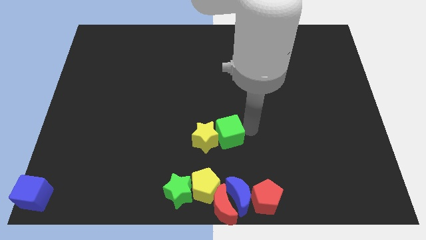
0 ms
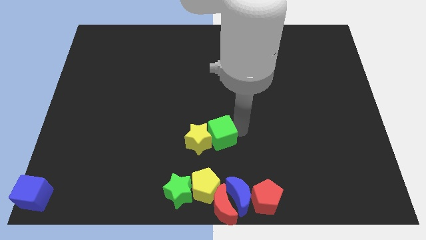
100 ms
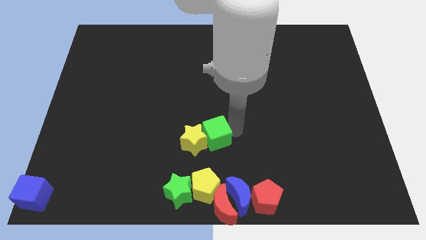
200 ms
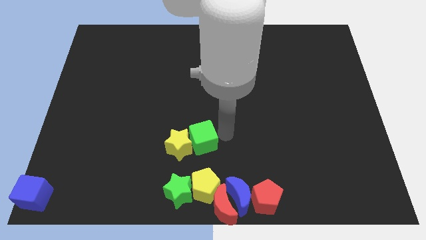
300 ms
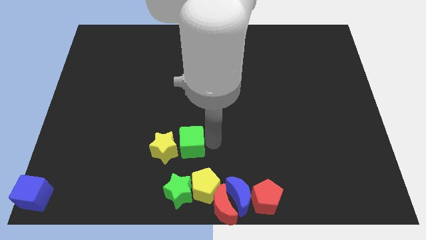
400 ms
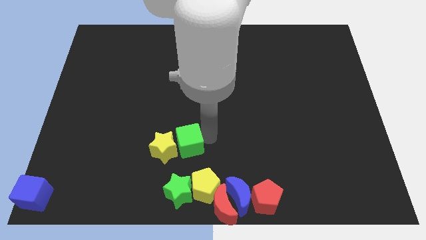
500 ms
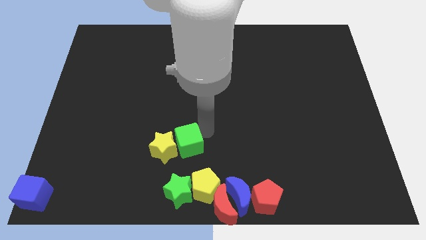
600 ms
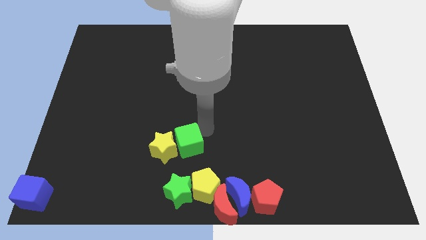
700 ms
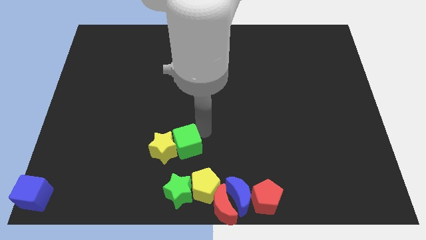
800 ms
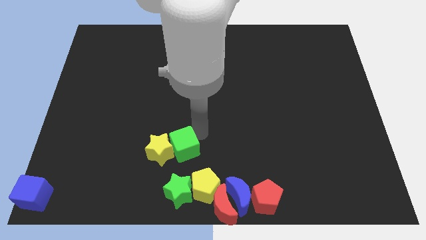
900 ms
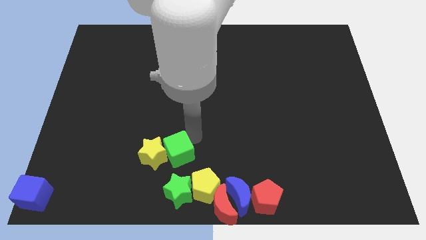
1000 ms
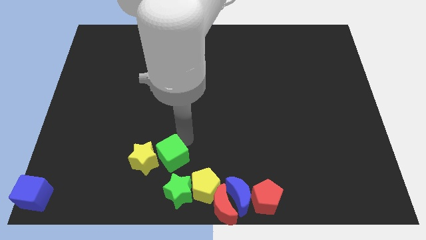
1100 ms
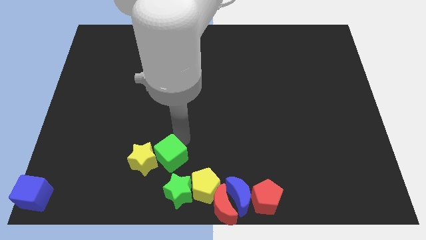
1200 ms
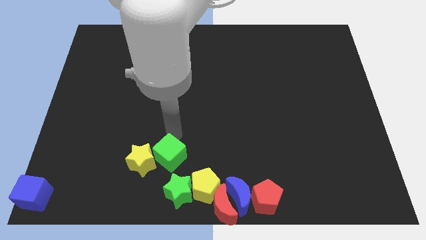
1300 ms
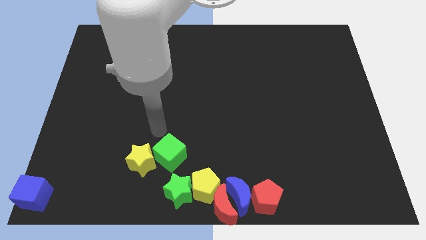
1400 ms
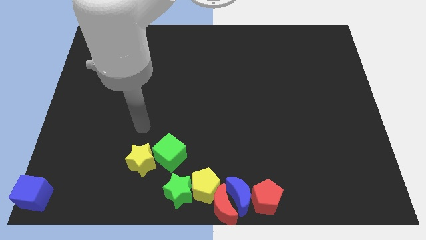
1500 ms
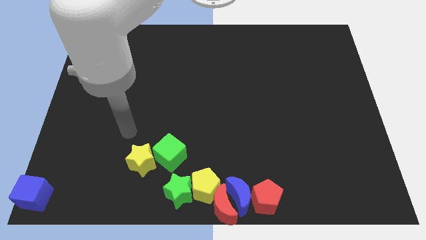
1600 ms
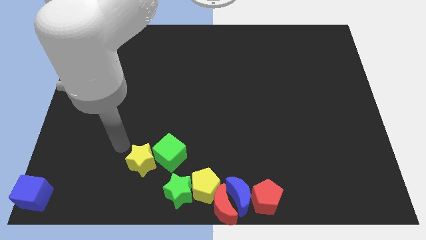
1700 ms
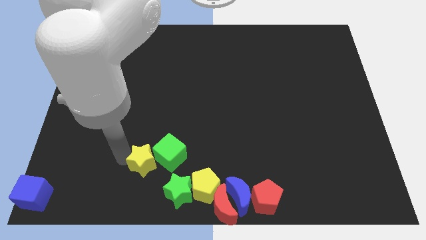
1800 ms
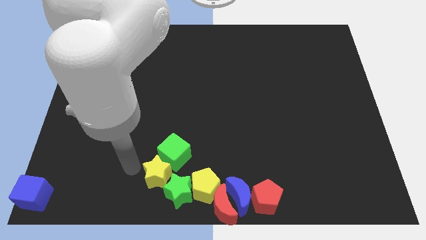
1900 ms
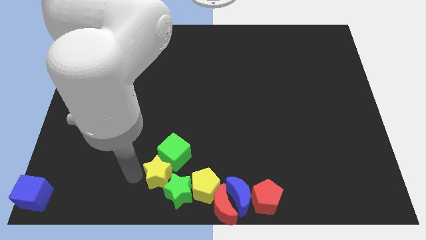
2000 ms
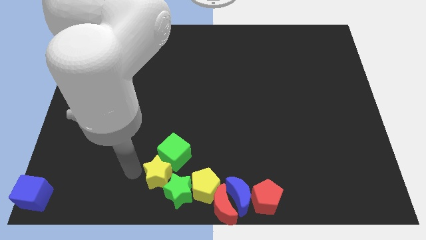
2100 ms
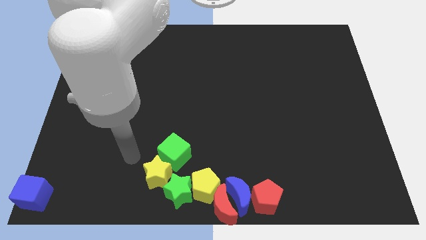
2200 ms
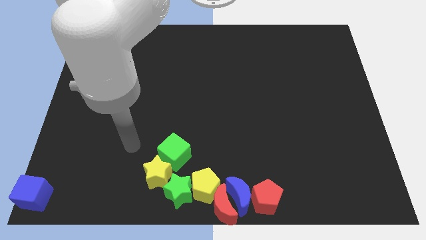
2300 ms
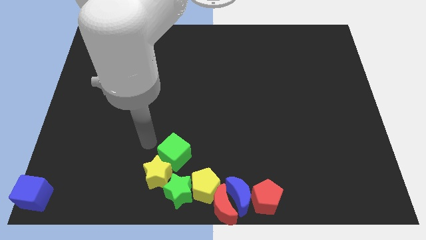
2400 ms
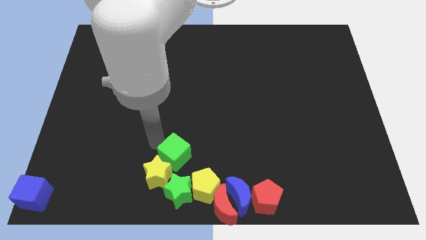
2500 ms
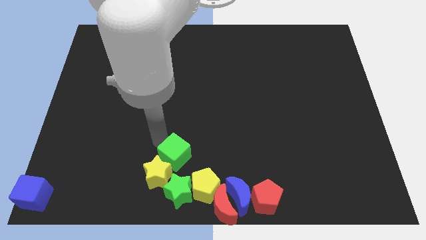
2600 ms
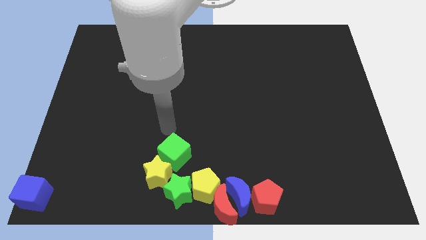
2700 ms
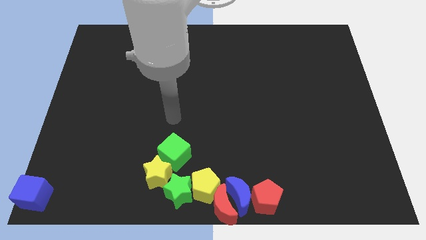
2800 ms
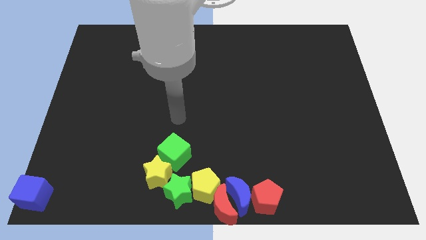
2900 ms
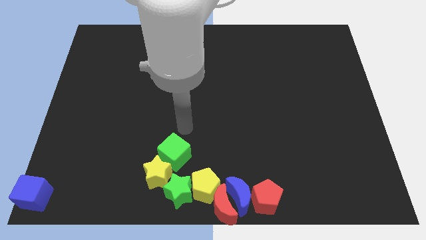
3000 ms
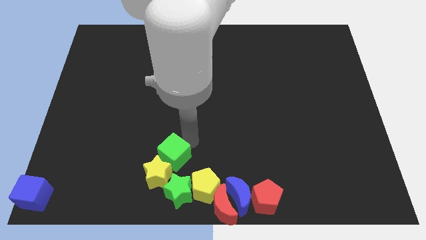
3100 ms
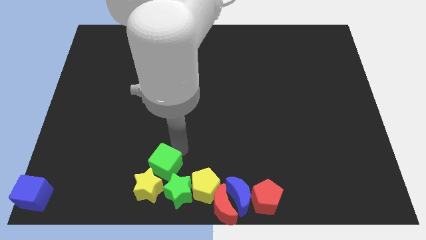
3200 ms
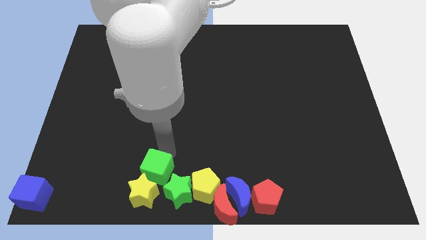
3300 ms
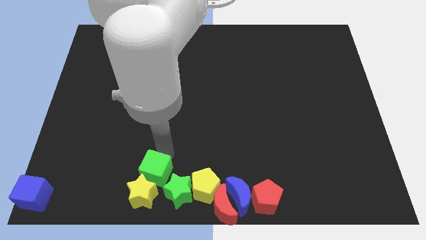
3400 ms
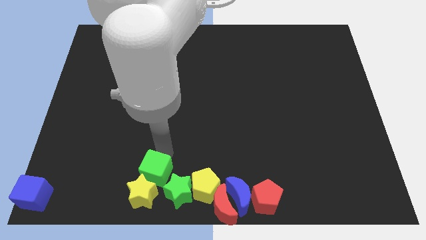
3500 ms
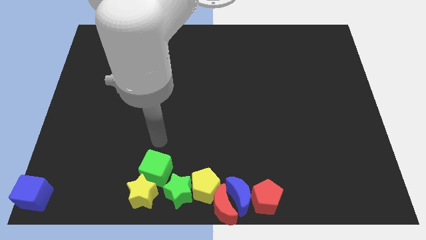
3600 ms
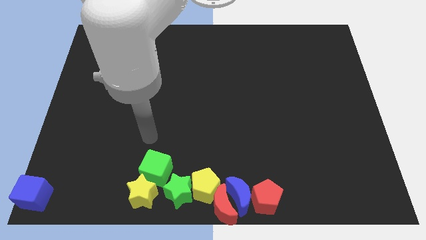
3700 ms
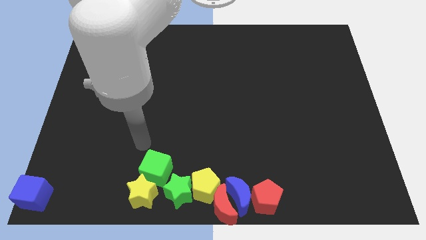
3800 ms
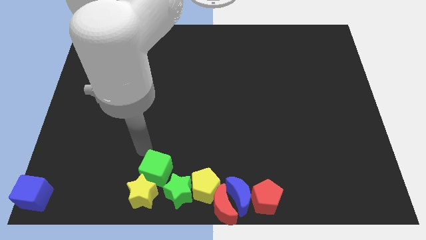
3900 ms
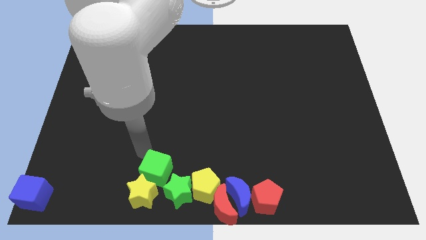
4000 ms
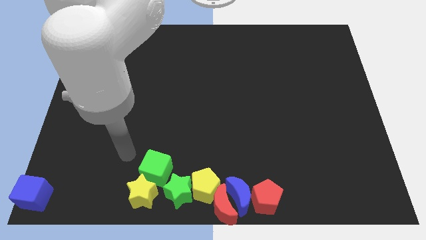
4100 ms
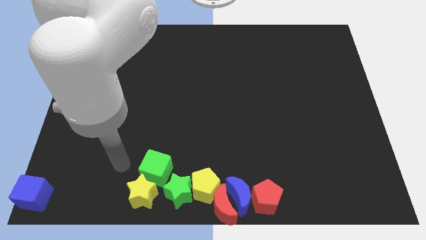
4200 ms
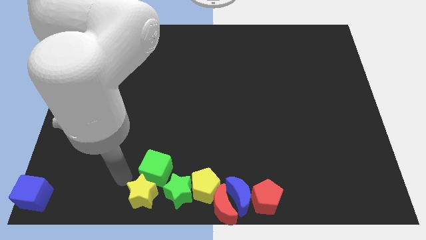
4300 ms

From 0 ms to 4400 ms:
move the yellow star along with green cube to the bottom side of the board

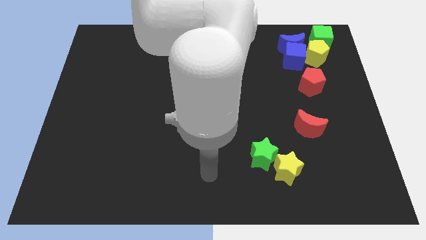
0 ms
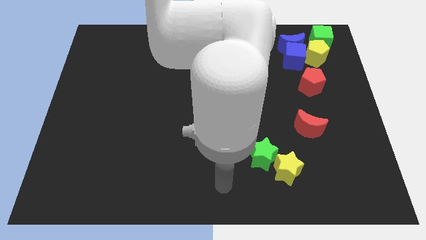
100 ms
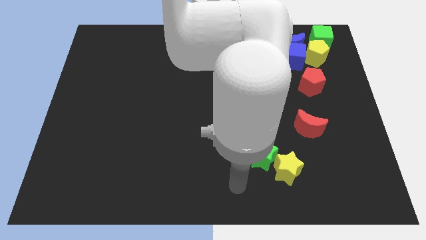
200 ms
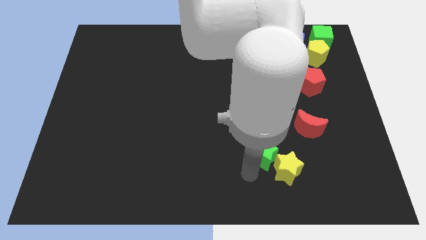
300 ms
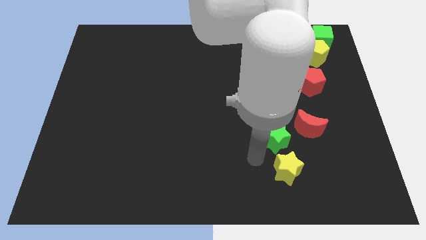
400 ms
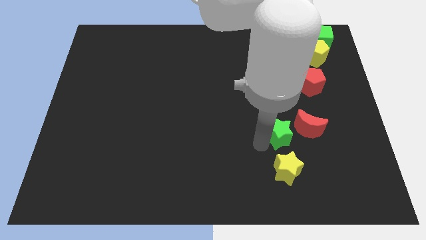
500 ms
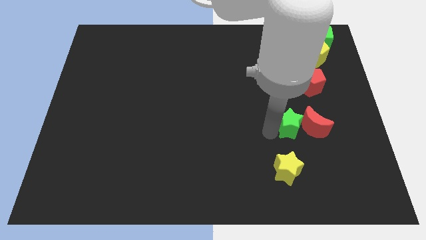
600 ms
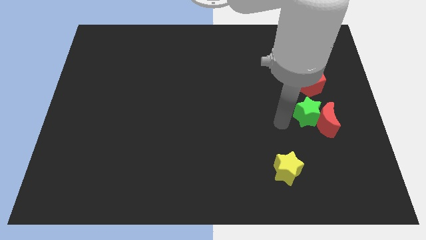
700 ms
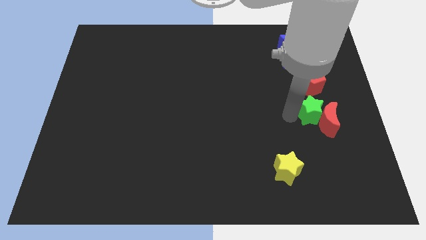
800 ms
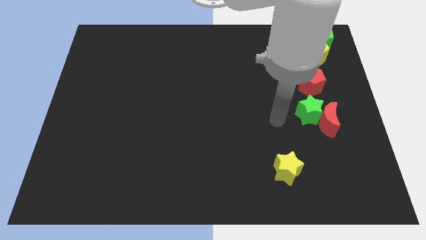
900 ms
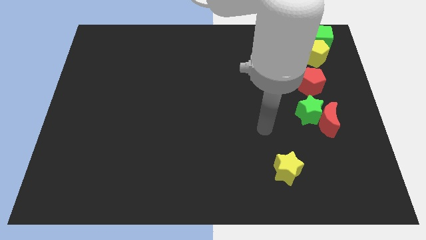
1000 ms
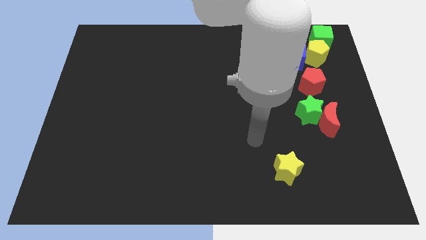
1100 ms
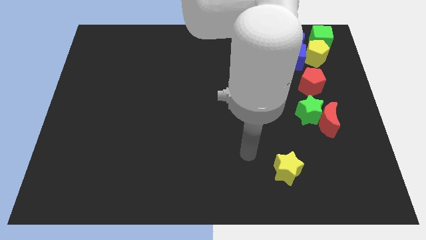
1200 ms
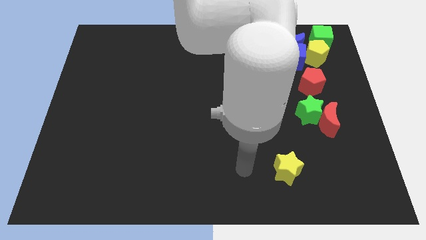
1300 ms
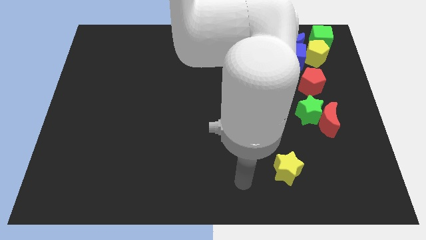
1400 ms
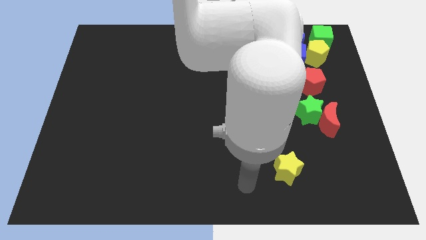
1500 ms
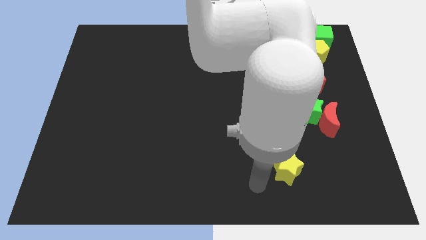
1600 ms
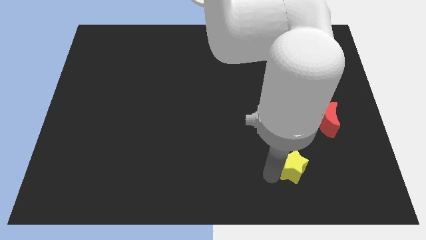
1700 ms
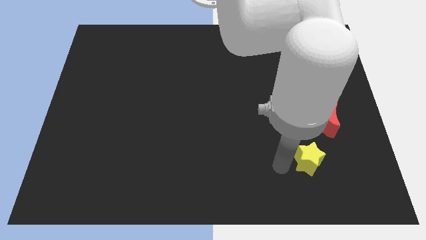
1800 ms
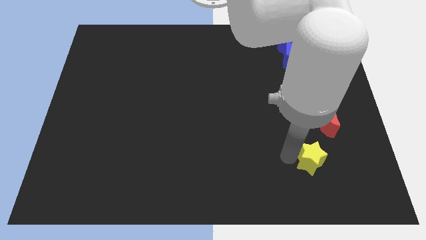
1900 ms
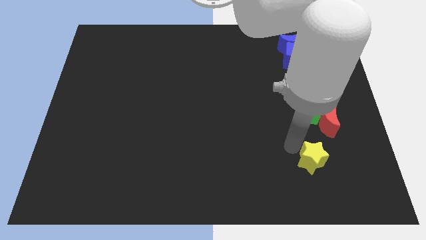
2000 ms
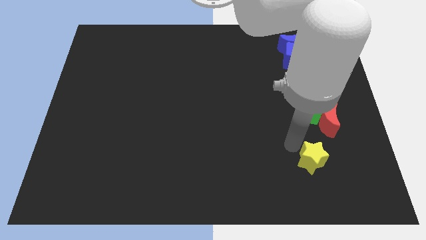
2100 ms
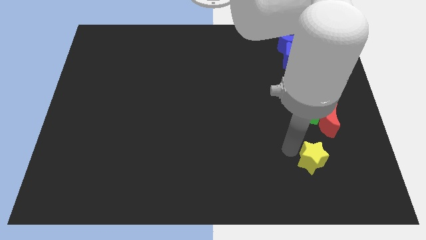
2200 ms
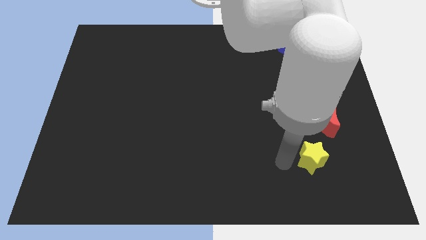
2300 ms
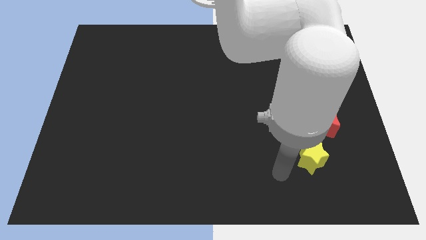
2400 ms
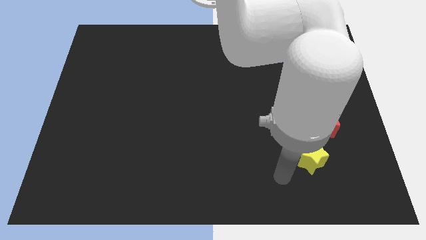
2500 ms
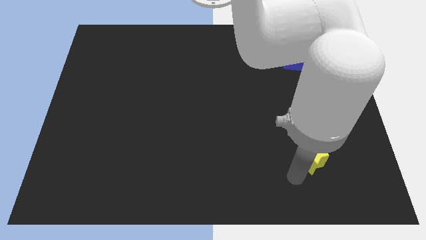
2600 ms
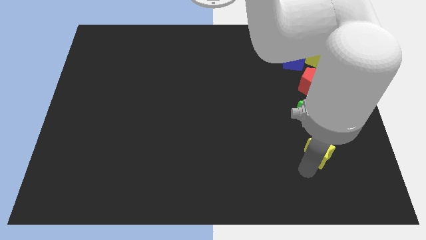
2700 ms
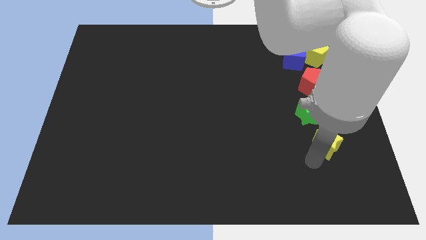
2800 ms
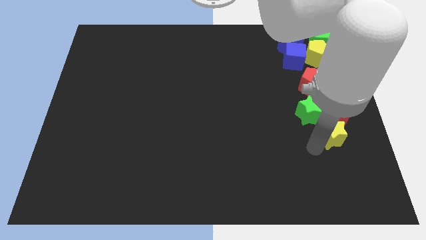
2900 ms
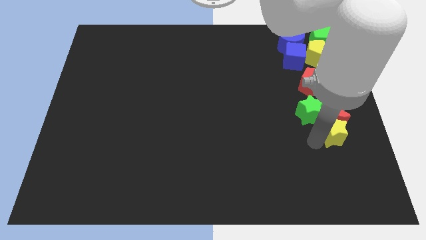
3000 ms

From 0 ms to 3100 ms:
add yellow and green stars to red moon

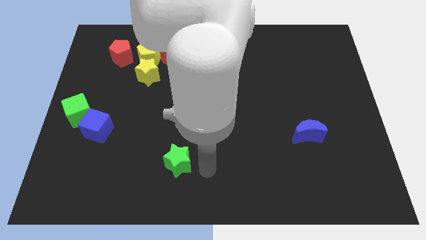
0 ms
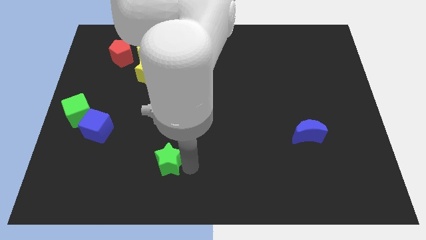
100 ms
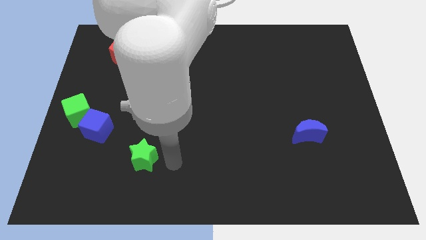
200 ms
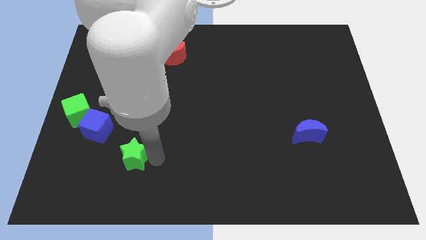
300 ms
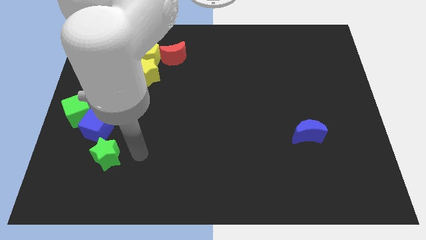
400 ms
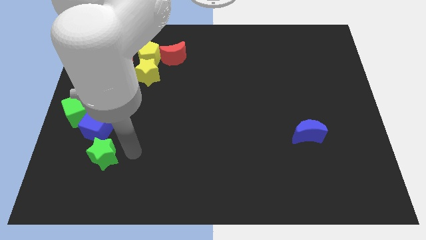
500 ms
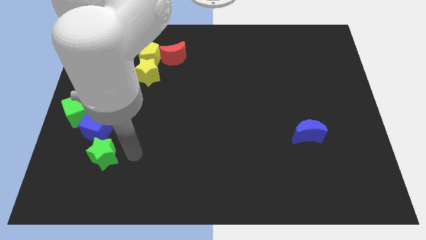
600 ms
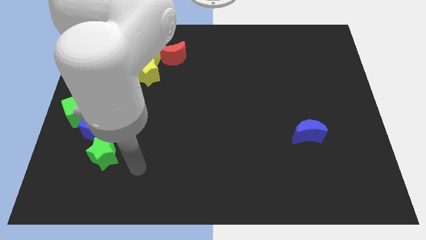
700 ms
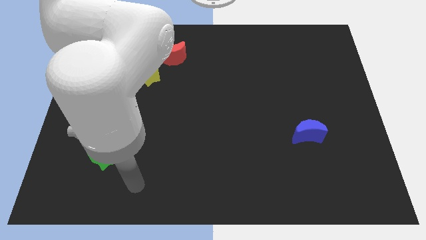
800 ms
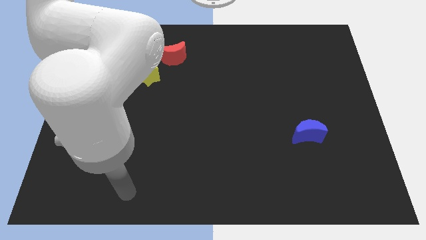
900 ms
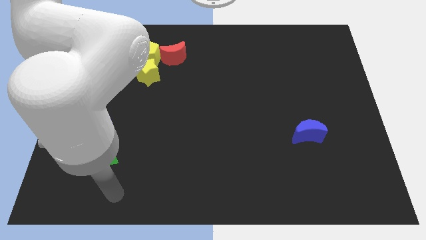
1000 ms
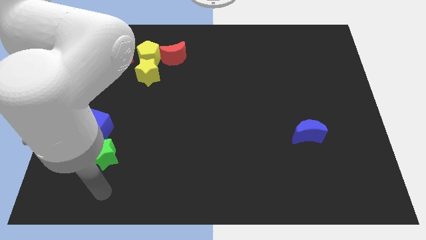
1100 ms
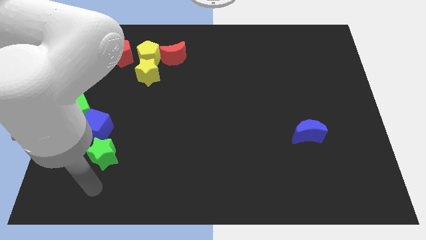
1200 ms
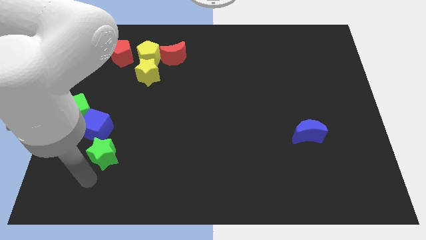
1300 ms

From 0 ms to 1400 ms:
slide the green star to the bottom right of the blue cube
